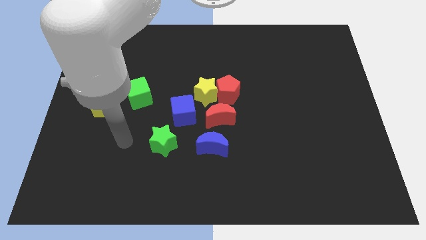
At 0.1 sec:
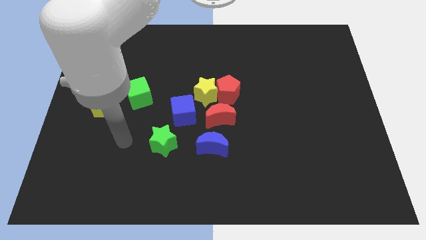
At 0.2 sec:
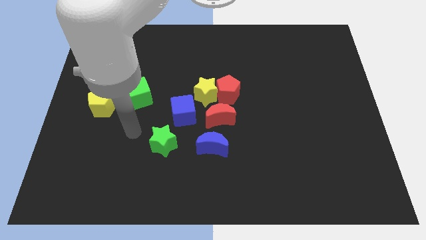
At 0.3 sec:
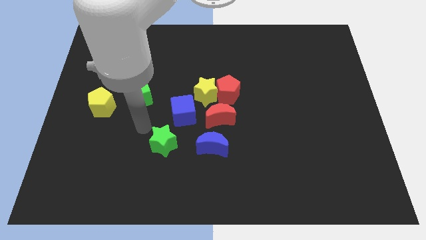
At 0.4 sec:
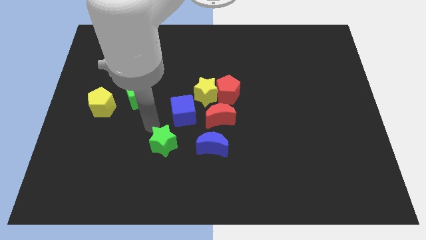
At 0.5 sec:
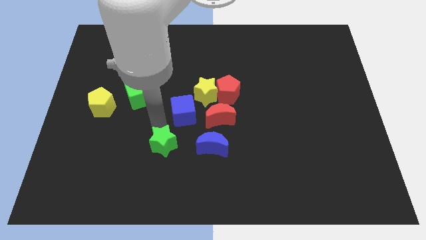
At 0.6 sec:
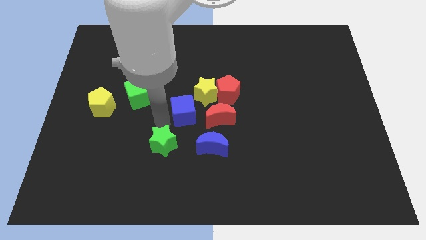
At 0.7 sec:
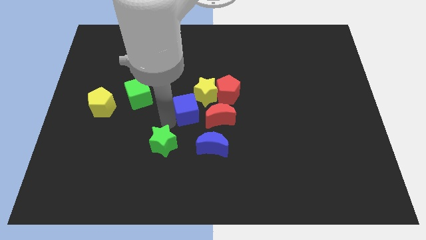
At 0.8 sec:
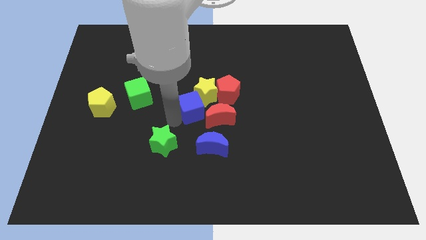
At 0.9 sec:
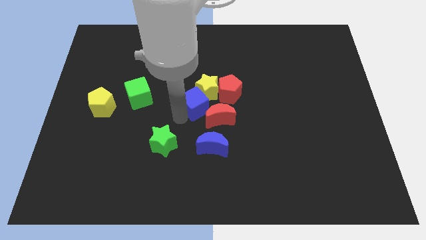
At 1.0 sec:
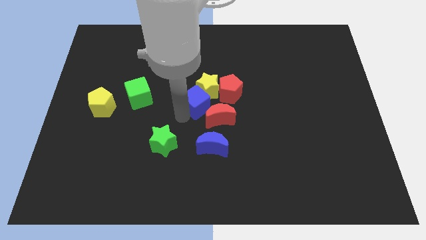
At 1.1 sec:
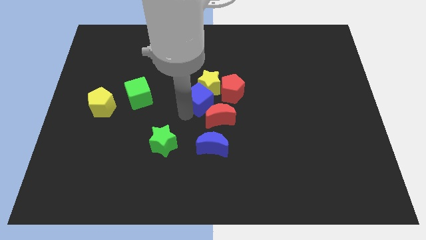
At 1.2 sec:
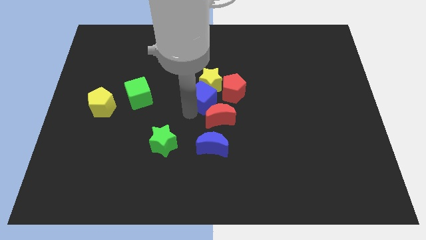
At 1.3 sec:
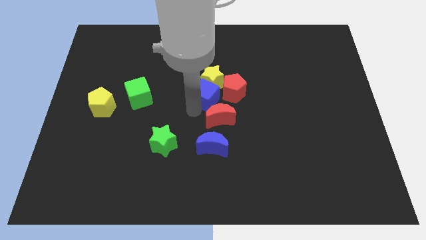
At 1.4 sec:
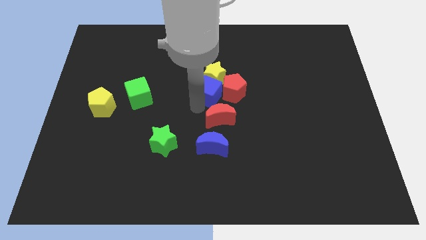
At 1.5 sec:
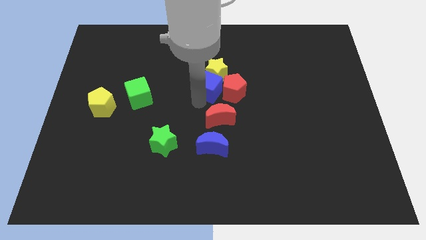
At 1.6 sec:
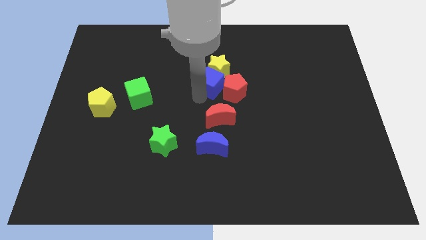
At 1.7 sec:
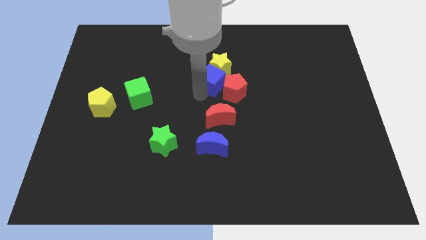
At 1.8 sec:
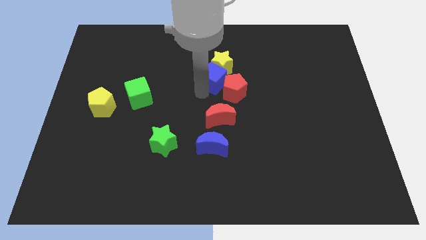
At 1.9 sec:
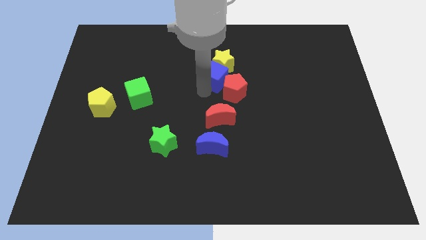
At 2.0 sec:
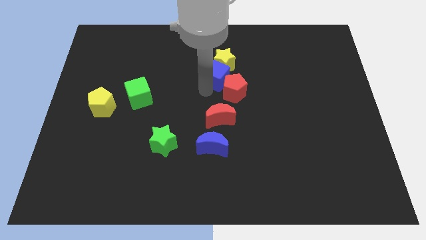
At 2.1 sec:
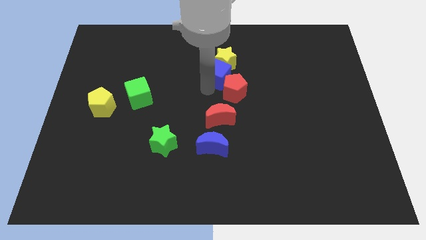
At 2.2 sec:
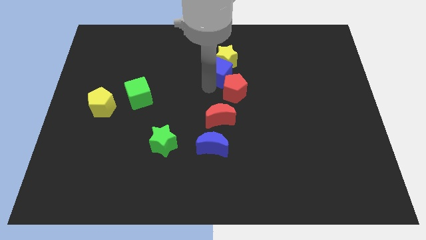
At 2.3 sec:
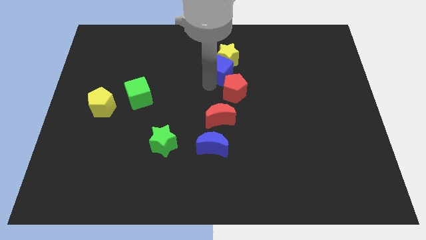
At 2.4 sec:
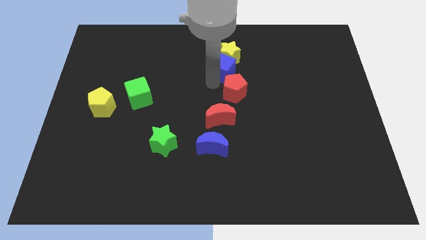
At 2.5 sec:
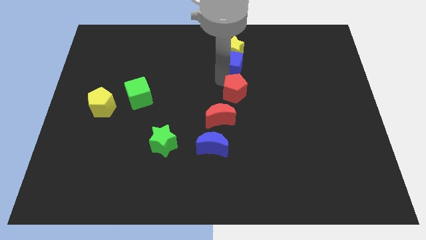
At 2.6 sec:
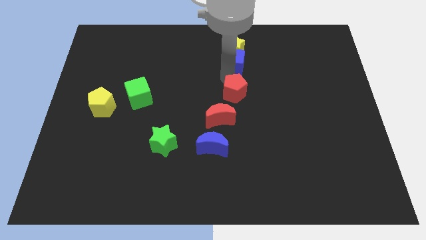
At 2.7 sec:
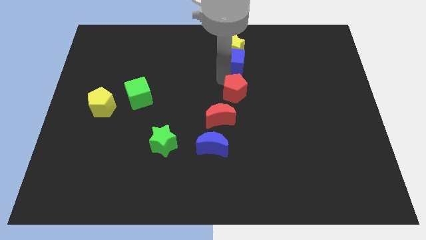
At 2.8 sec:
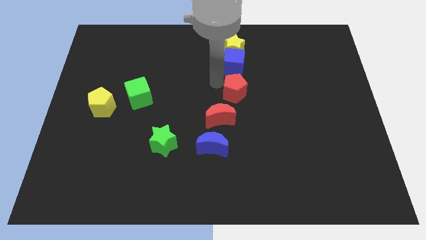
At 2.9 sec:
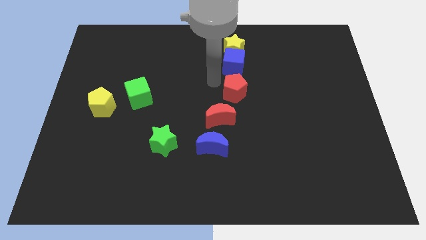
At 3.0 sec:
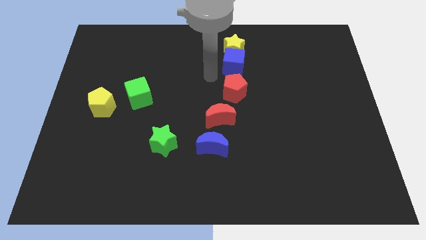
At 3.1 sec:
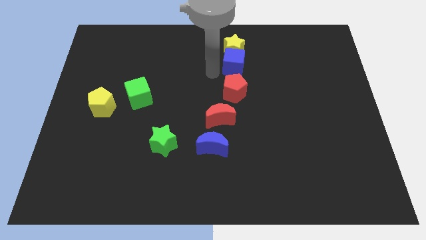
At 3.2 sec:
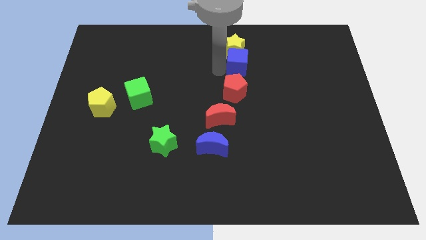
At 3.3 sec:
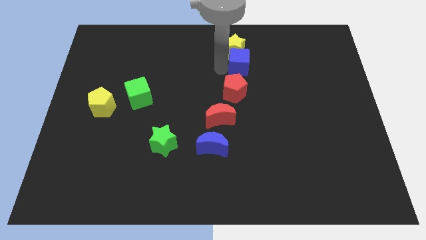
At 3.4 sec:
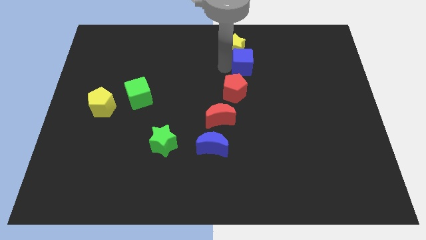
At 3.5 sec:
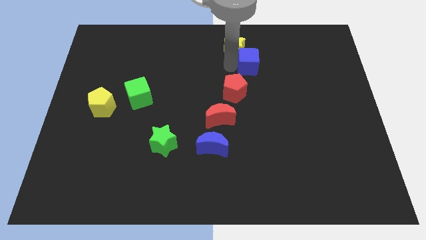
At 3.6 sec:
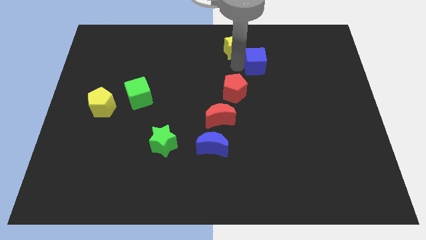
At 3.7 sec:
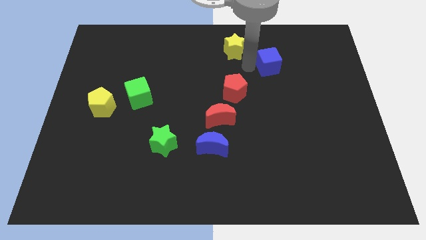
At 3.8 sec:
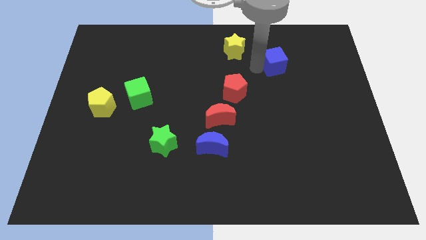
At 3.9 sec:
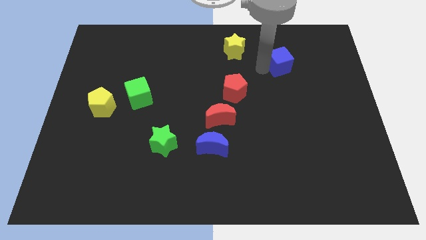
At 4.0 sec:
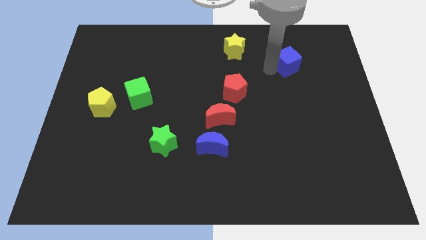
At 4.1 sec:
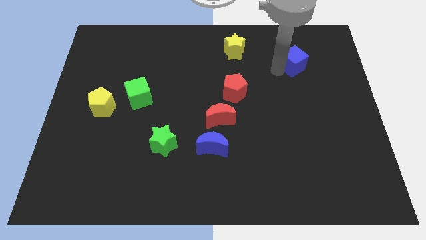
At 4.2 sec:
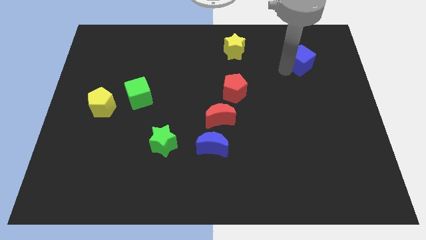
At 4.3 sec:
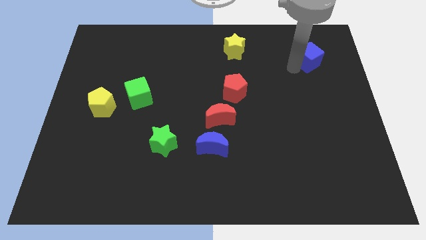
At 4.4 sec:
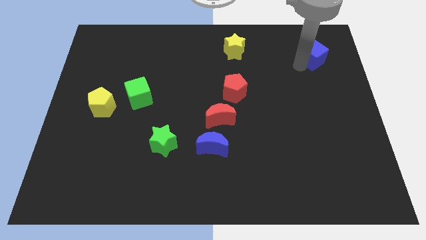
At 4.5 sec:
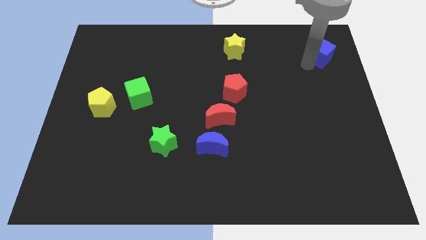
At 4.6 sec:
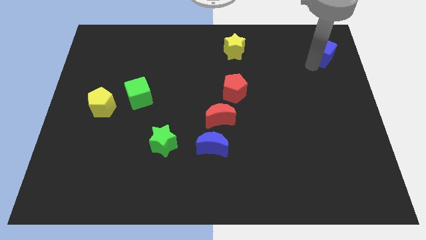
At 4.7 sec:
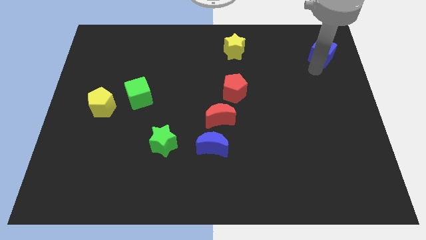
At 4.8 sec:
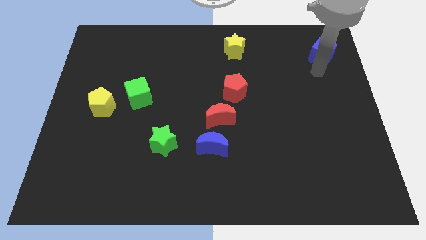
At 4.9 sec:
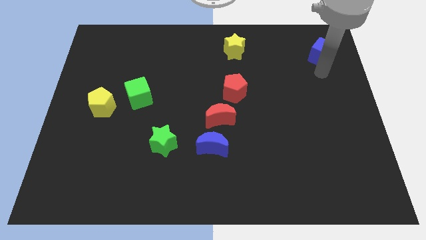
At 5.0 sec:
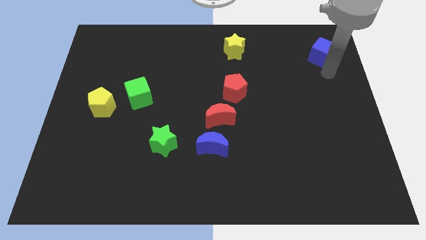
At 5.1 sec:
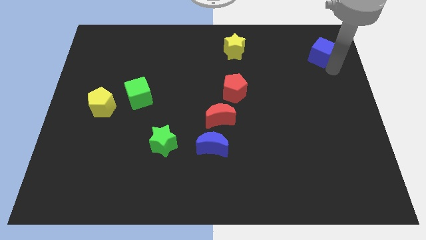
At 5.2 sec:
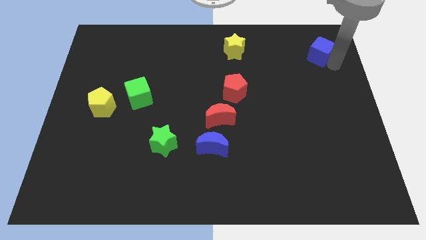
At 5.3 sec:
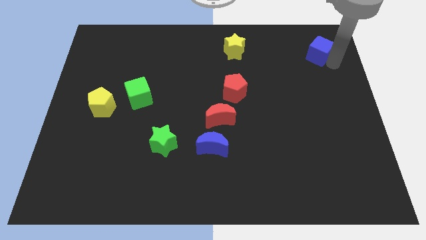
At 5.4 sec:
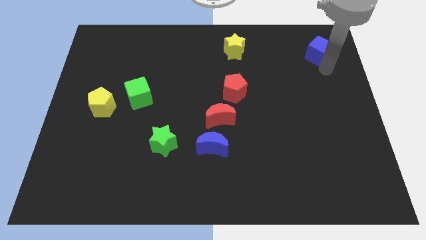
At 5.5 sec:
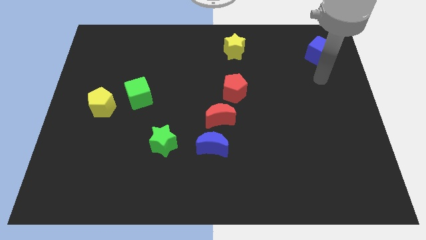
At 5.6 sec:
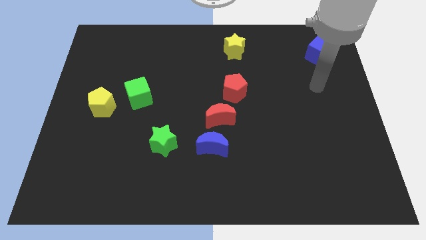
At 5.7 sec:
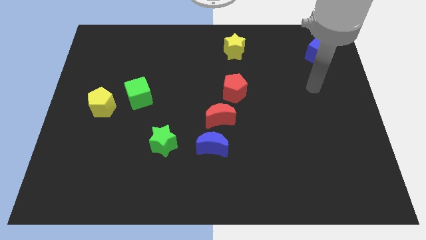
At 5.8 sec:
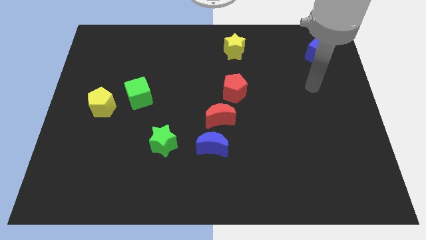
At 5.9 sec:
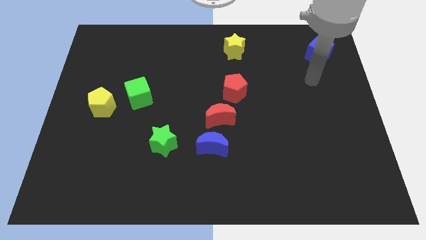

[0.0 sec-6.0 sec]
push the blue cube and the yellow star parallel to each other

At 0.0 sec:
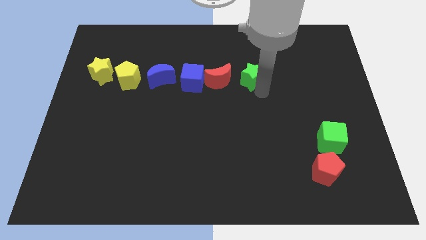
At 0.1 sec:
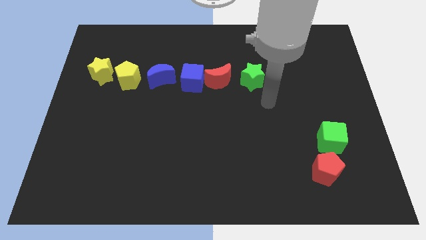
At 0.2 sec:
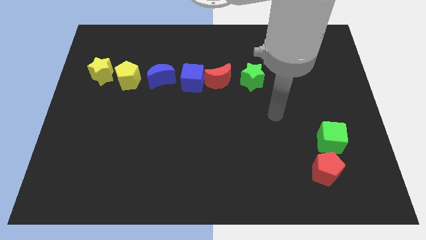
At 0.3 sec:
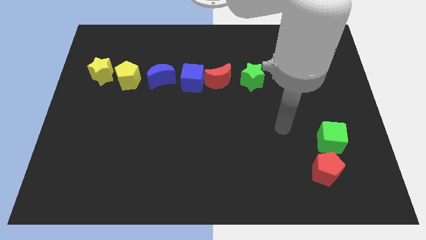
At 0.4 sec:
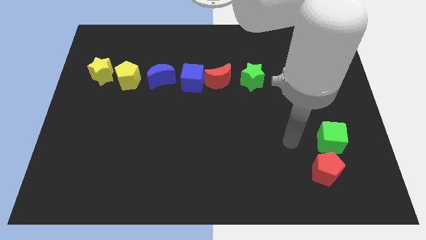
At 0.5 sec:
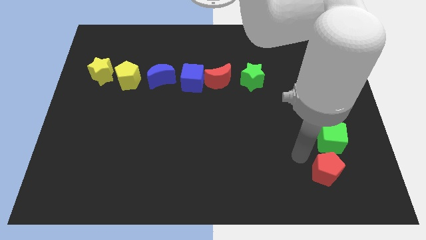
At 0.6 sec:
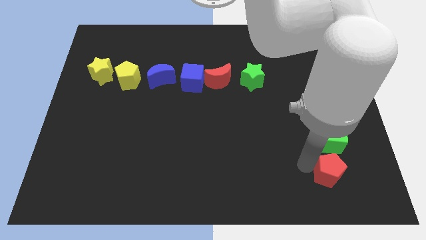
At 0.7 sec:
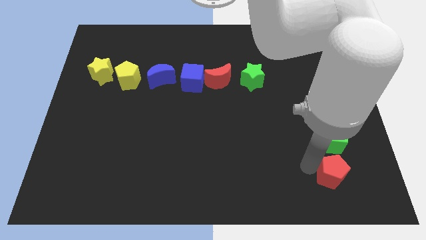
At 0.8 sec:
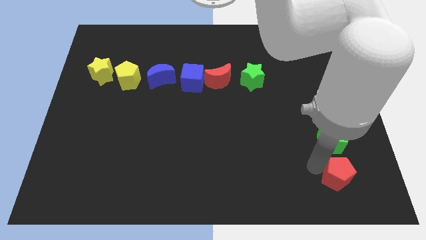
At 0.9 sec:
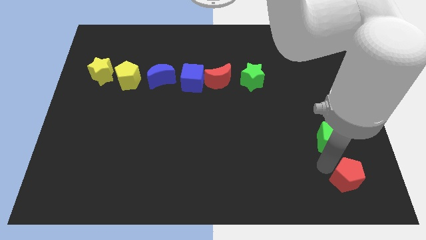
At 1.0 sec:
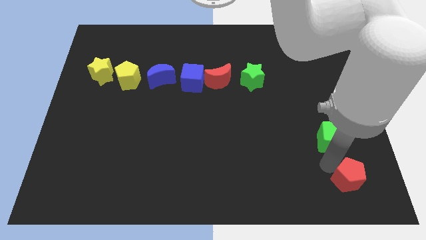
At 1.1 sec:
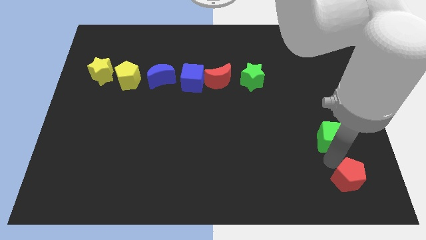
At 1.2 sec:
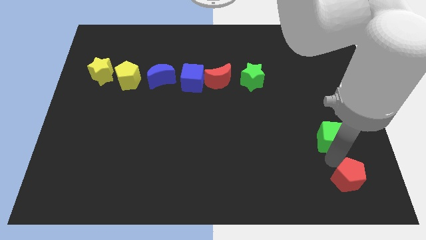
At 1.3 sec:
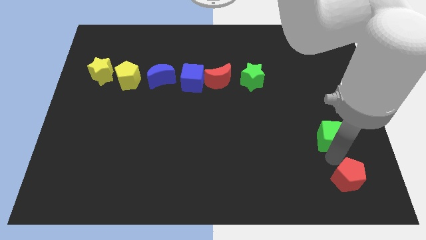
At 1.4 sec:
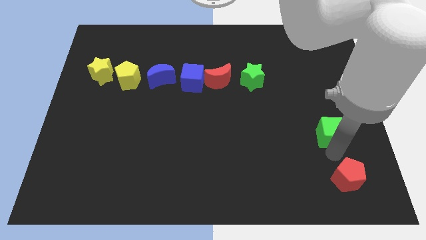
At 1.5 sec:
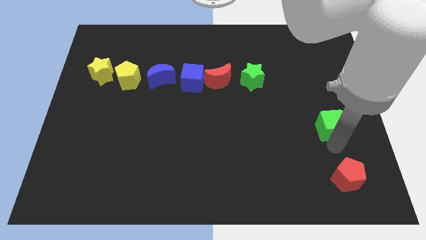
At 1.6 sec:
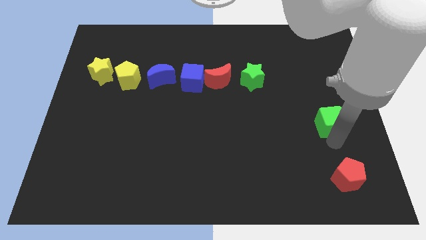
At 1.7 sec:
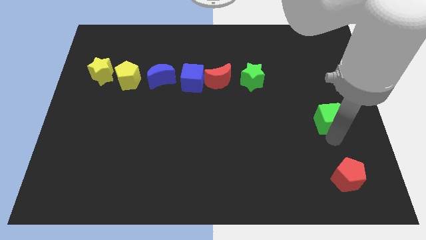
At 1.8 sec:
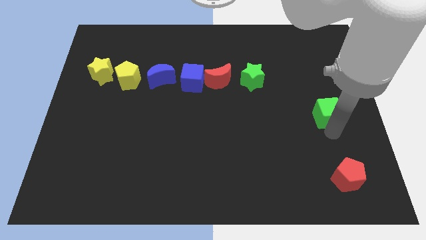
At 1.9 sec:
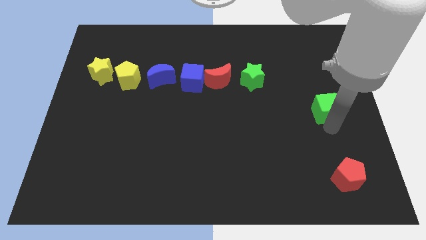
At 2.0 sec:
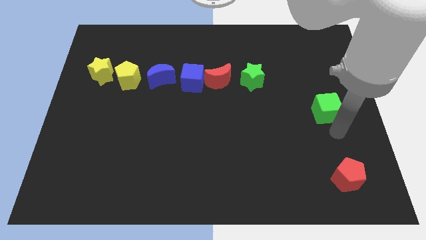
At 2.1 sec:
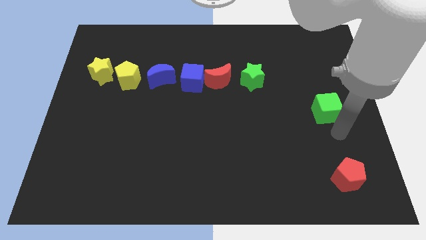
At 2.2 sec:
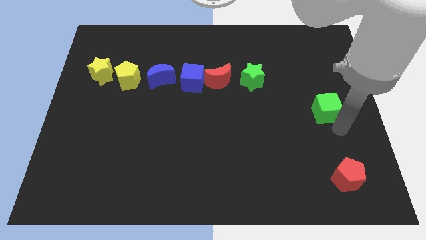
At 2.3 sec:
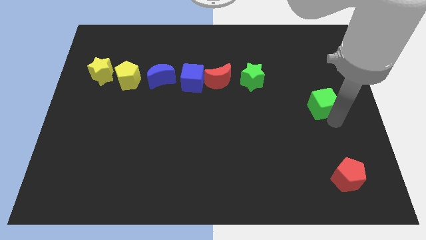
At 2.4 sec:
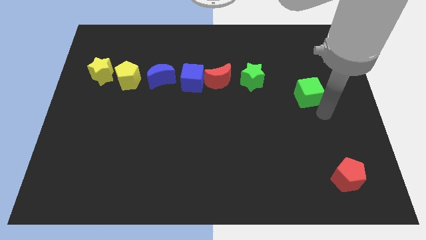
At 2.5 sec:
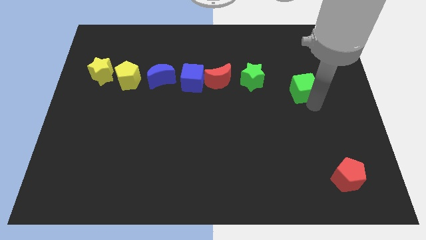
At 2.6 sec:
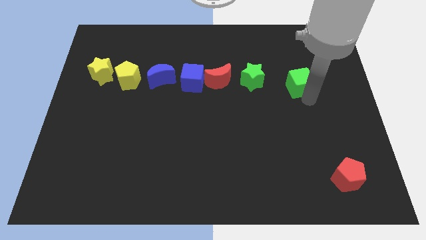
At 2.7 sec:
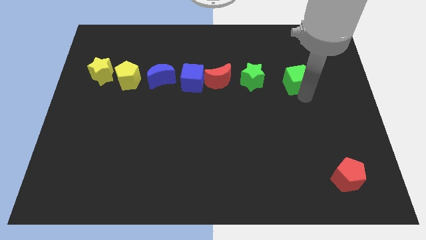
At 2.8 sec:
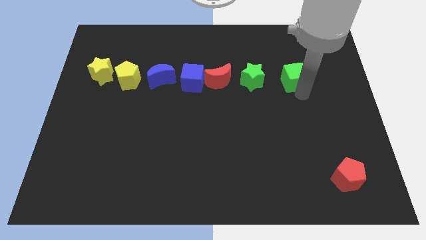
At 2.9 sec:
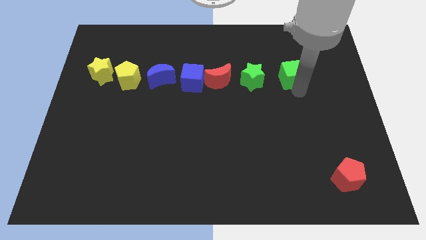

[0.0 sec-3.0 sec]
place green cube beside green star
